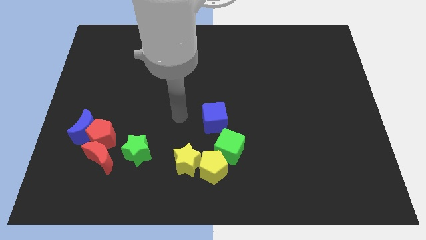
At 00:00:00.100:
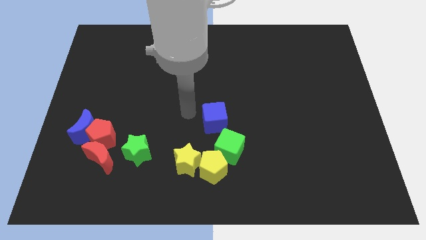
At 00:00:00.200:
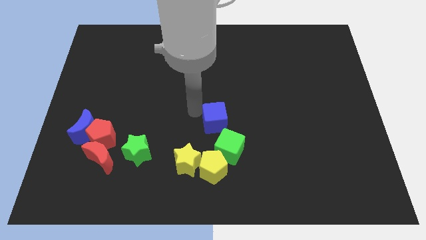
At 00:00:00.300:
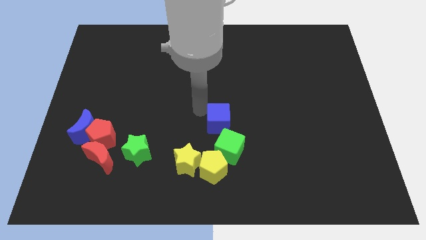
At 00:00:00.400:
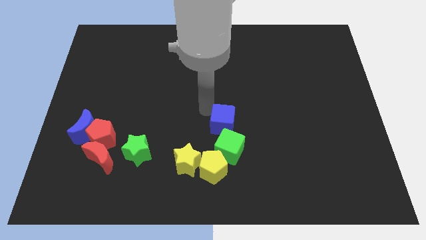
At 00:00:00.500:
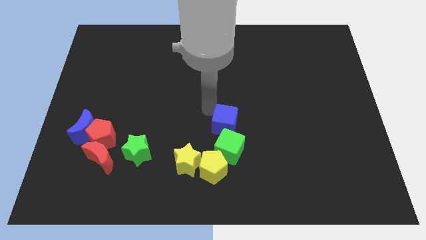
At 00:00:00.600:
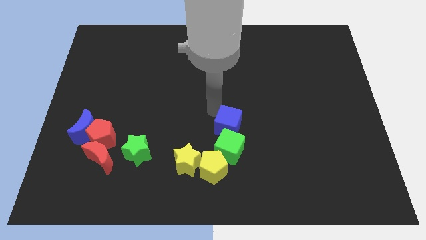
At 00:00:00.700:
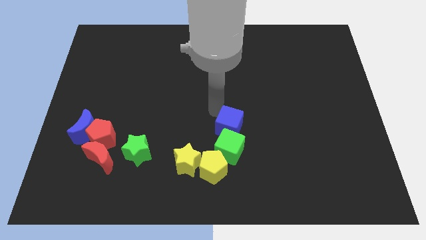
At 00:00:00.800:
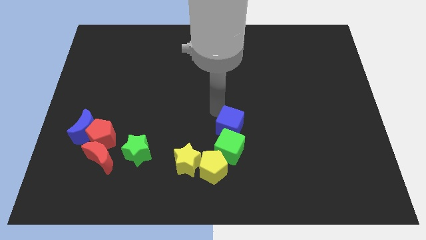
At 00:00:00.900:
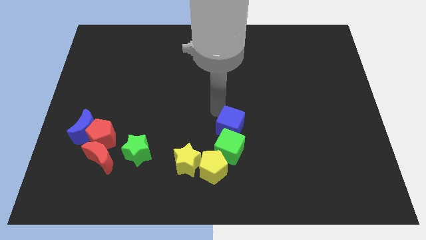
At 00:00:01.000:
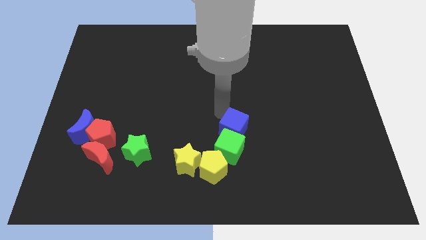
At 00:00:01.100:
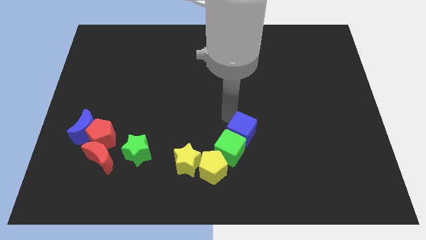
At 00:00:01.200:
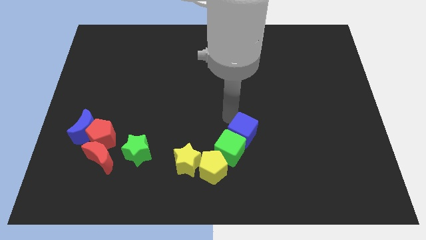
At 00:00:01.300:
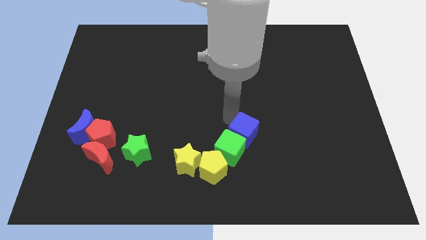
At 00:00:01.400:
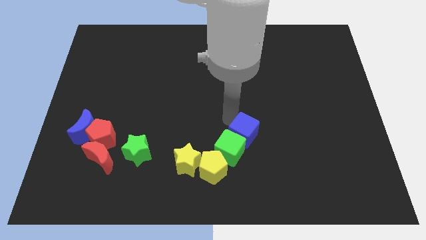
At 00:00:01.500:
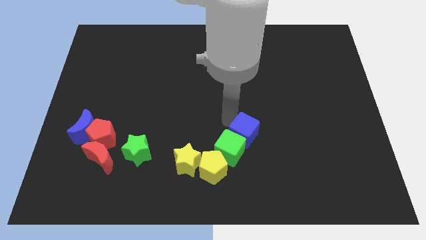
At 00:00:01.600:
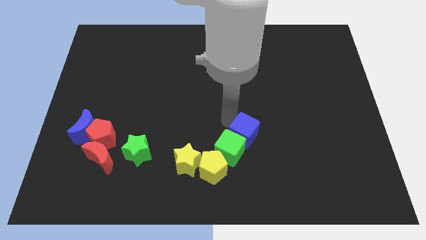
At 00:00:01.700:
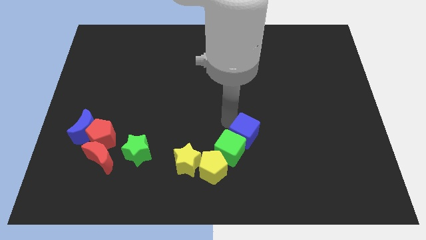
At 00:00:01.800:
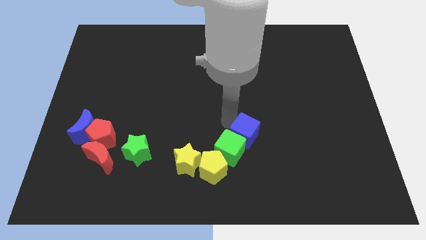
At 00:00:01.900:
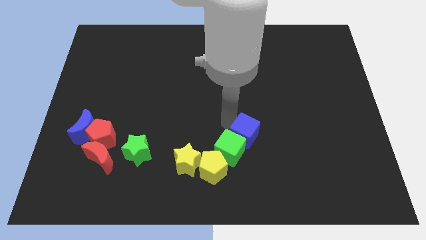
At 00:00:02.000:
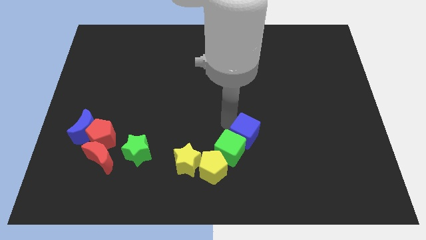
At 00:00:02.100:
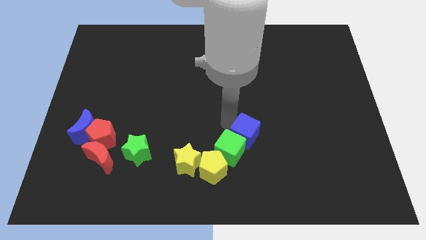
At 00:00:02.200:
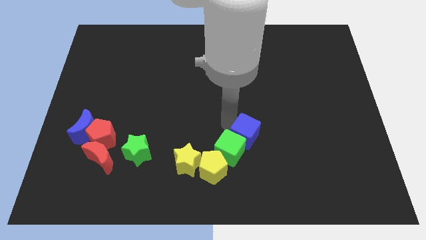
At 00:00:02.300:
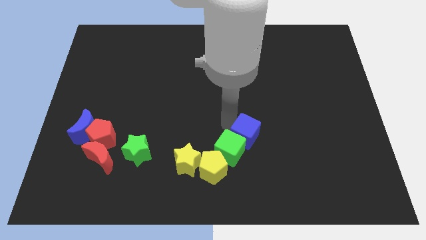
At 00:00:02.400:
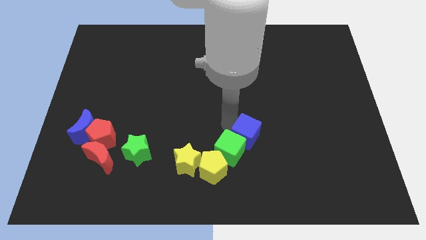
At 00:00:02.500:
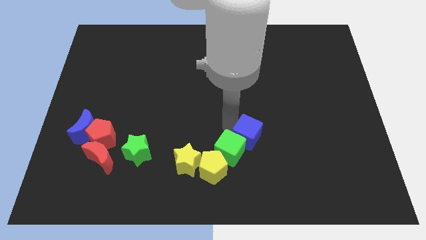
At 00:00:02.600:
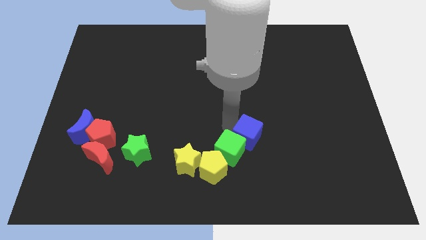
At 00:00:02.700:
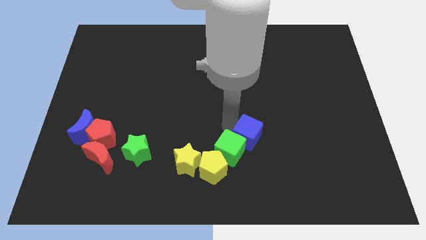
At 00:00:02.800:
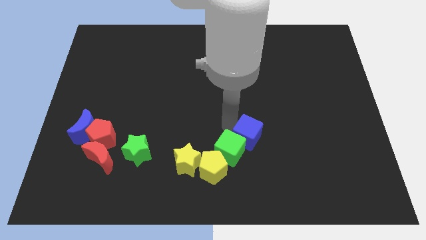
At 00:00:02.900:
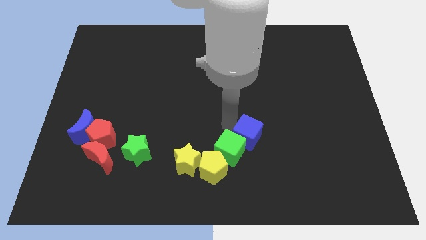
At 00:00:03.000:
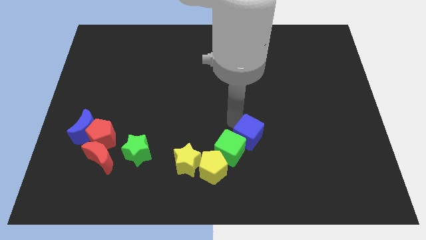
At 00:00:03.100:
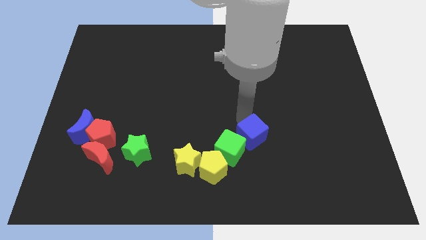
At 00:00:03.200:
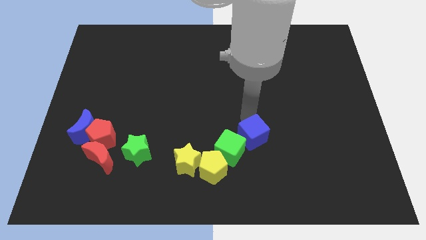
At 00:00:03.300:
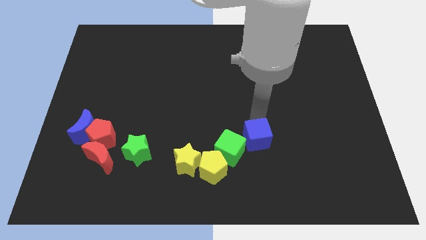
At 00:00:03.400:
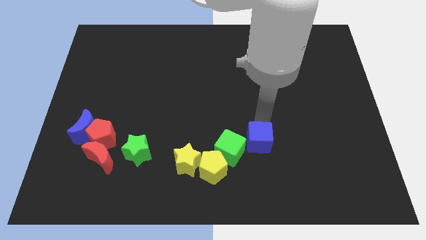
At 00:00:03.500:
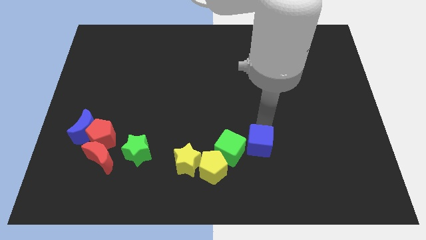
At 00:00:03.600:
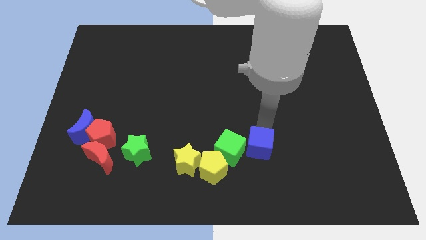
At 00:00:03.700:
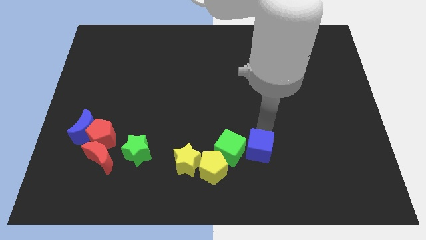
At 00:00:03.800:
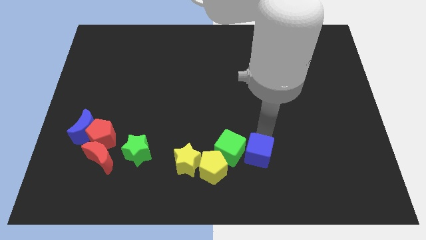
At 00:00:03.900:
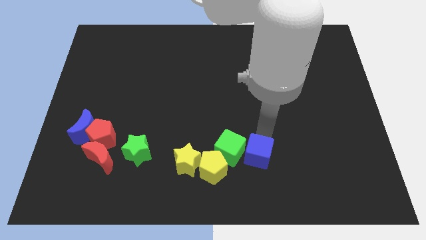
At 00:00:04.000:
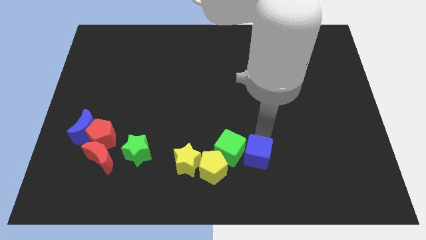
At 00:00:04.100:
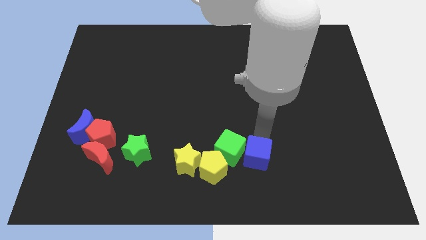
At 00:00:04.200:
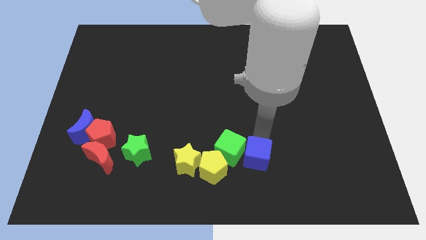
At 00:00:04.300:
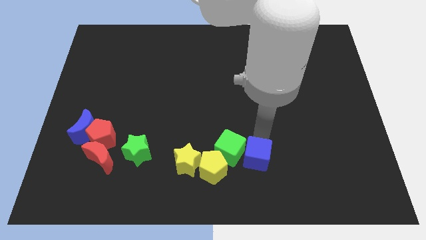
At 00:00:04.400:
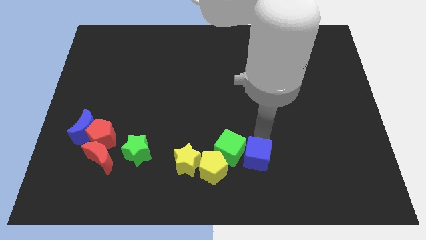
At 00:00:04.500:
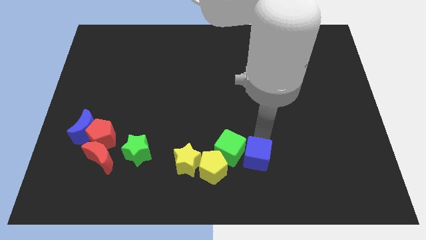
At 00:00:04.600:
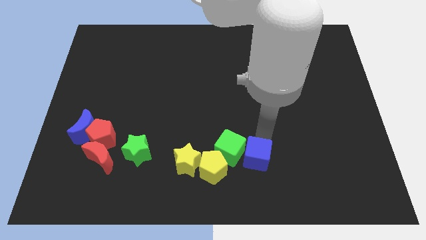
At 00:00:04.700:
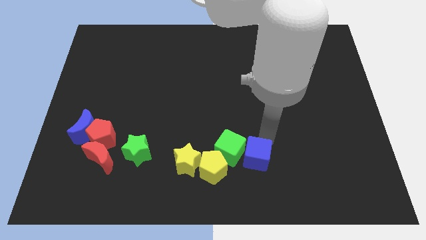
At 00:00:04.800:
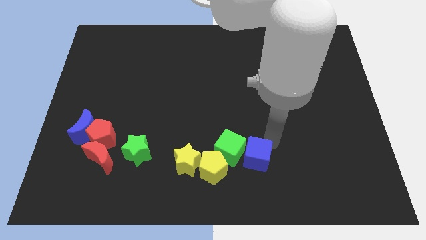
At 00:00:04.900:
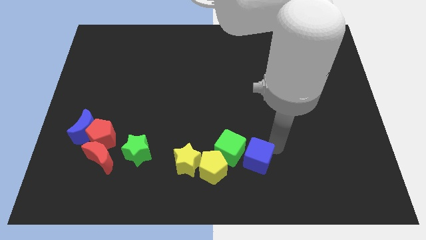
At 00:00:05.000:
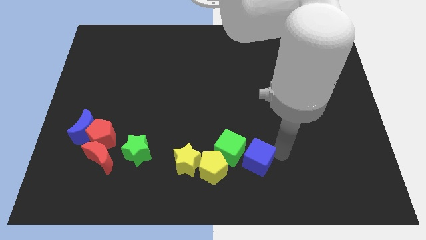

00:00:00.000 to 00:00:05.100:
move the blue cube to the right of the green cube

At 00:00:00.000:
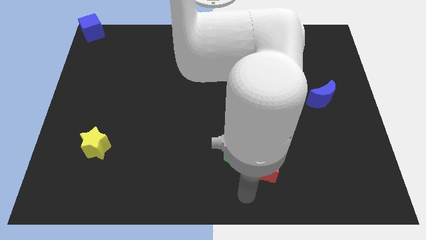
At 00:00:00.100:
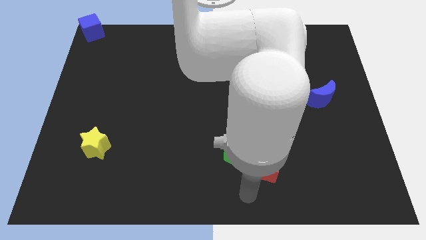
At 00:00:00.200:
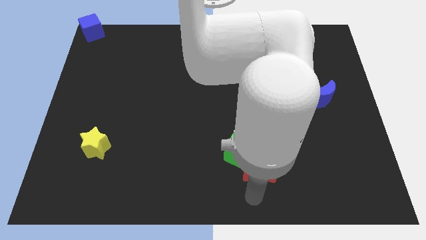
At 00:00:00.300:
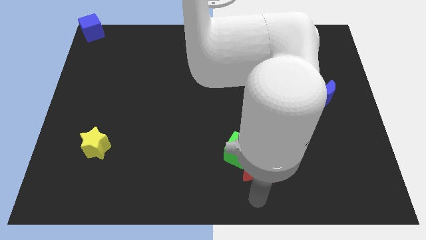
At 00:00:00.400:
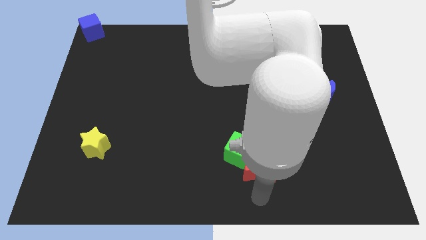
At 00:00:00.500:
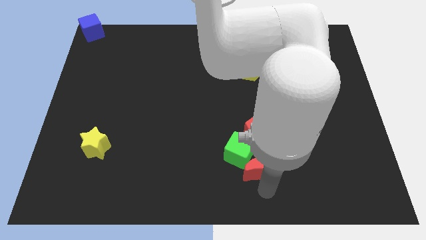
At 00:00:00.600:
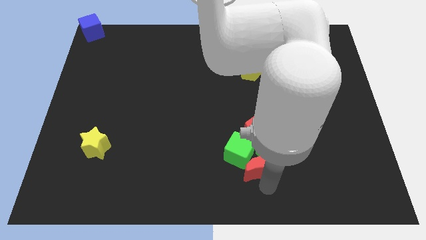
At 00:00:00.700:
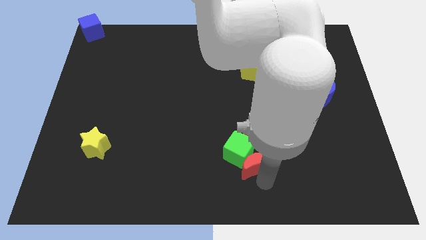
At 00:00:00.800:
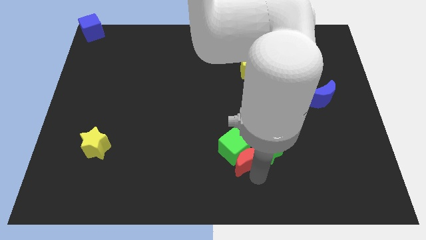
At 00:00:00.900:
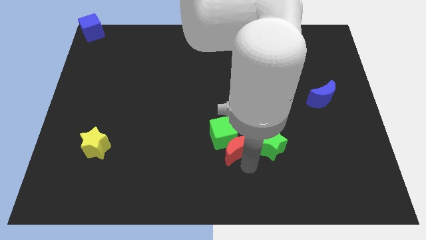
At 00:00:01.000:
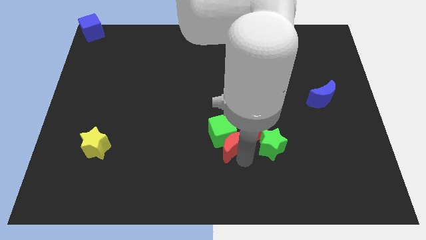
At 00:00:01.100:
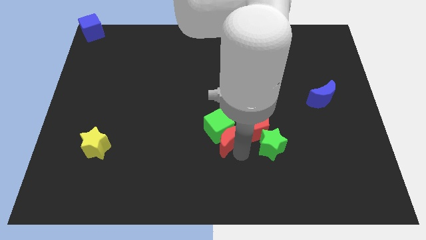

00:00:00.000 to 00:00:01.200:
move the red moon left to the red pentagon

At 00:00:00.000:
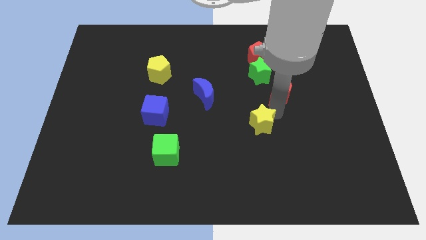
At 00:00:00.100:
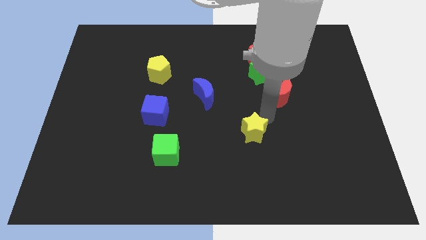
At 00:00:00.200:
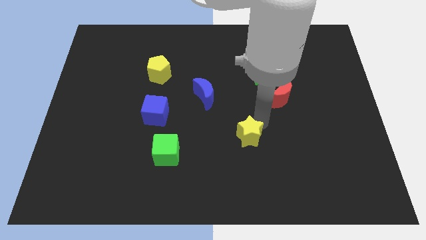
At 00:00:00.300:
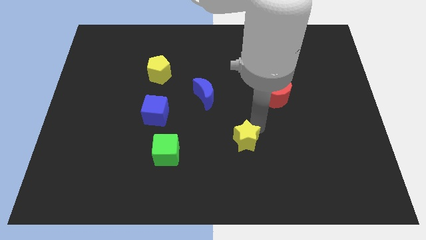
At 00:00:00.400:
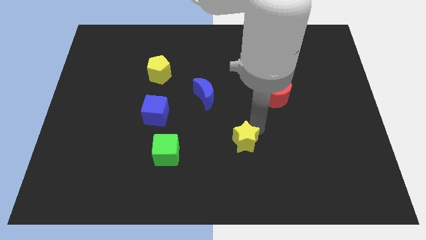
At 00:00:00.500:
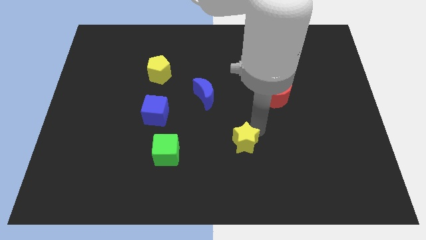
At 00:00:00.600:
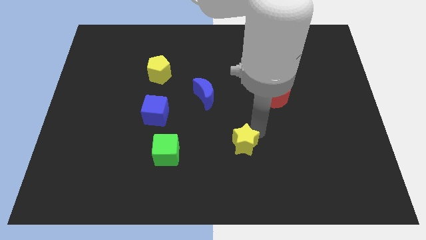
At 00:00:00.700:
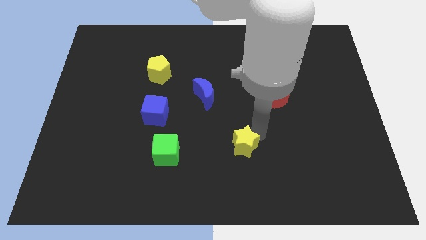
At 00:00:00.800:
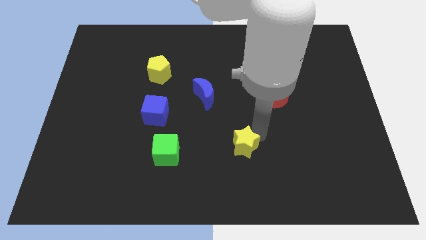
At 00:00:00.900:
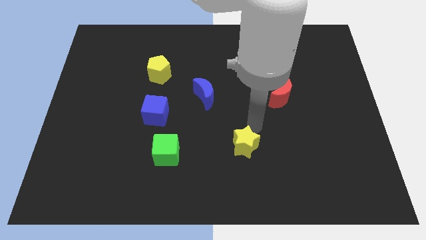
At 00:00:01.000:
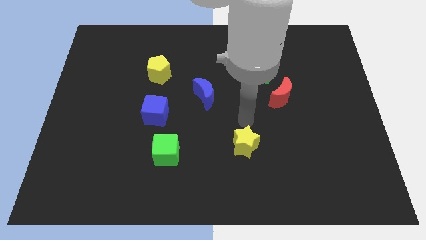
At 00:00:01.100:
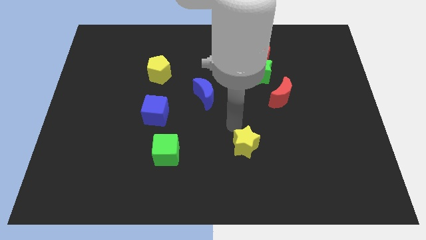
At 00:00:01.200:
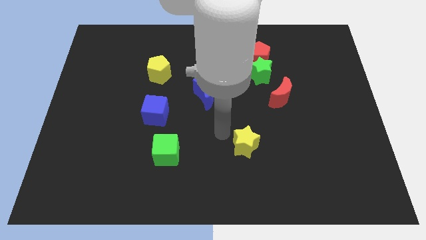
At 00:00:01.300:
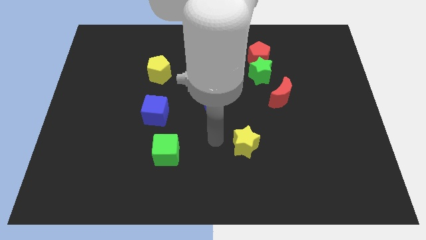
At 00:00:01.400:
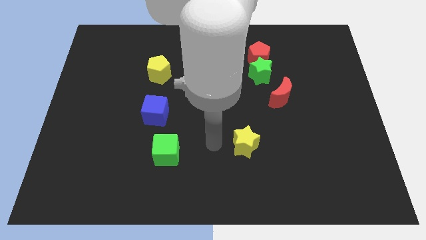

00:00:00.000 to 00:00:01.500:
move the yellow star slightly to the bottom center of the board

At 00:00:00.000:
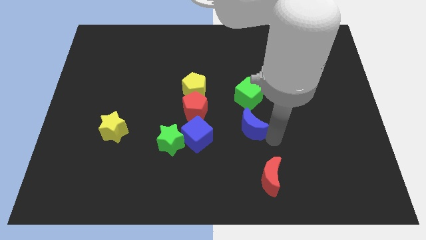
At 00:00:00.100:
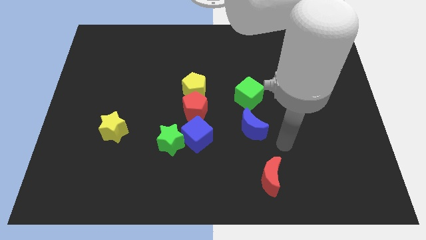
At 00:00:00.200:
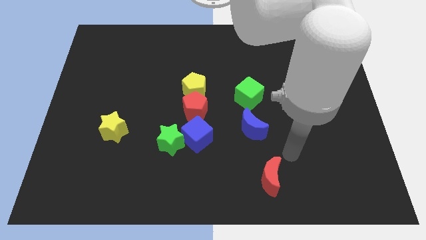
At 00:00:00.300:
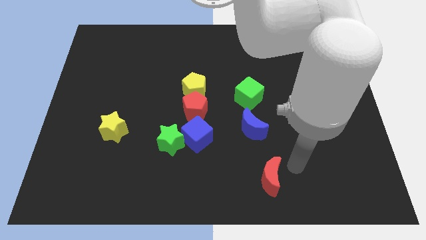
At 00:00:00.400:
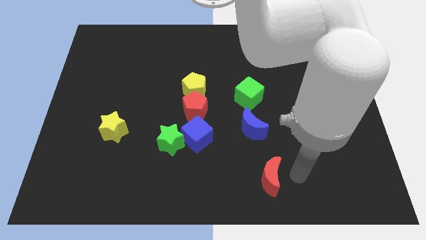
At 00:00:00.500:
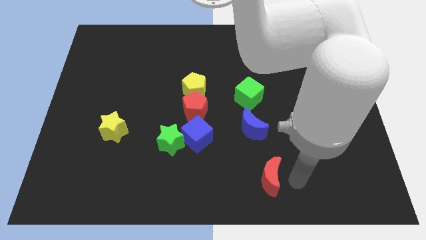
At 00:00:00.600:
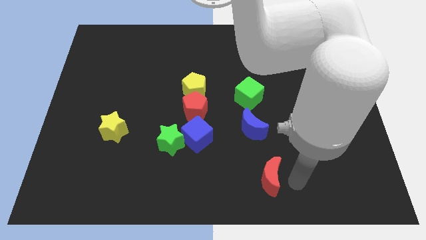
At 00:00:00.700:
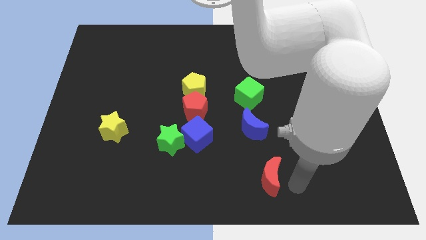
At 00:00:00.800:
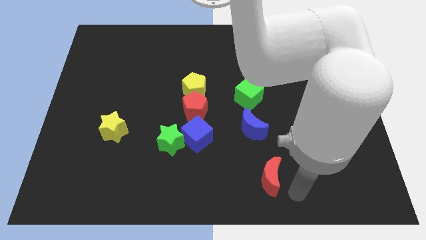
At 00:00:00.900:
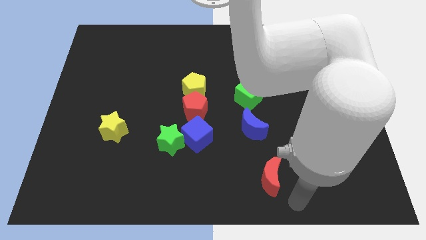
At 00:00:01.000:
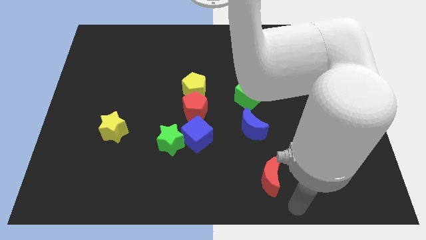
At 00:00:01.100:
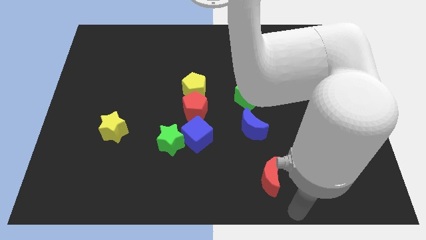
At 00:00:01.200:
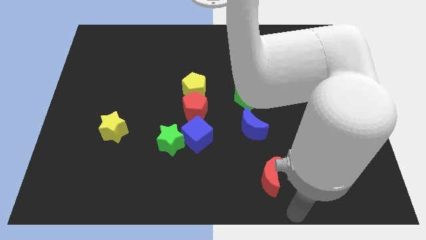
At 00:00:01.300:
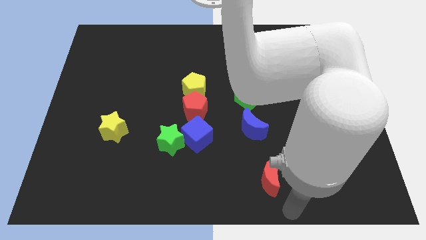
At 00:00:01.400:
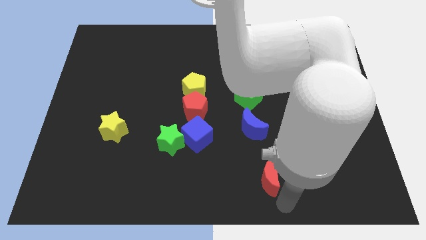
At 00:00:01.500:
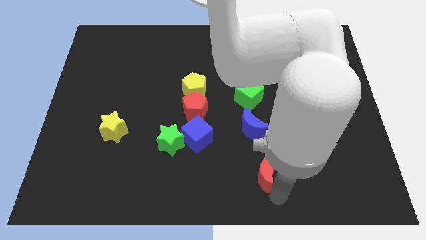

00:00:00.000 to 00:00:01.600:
move your arm to the bottom right of the red crescent
